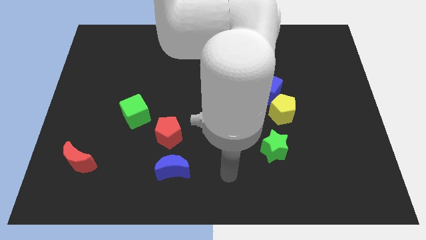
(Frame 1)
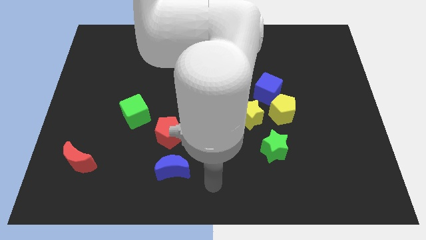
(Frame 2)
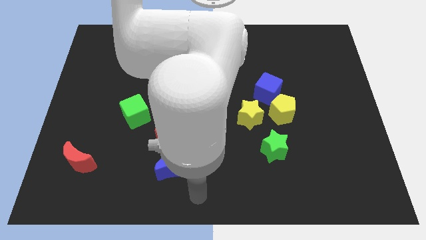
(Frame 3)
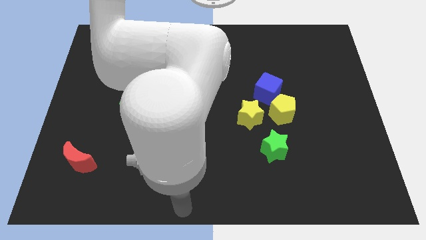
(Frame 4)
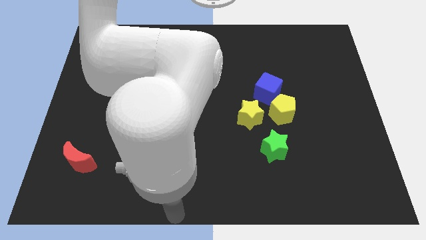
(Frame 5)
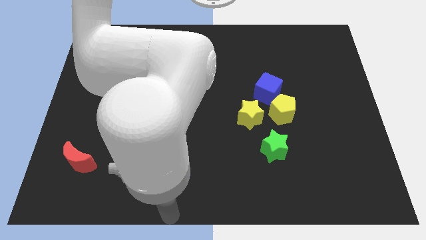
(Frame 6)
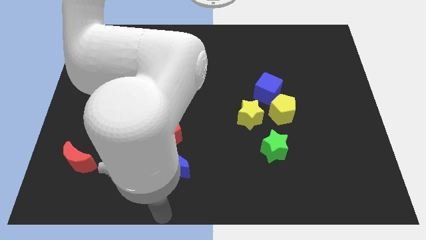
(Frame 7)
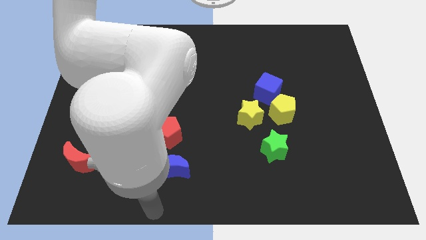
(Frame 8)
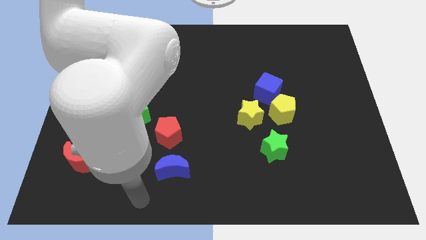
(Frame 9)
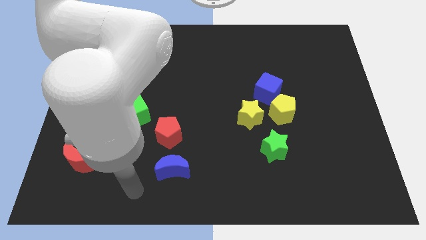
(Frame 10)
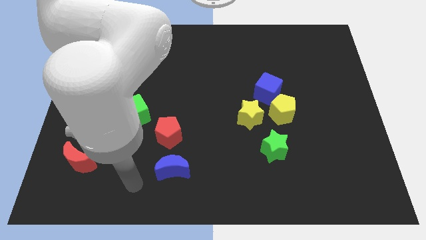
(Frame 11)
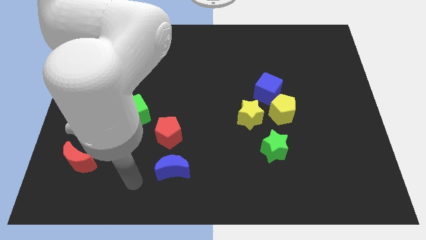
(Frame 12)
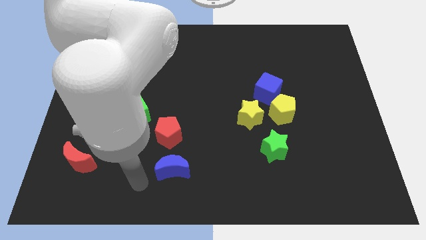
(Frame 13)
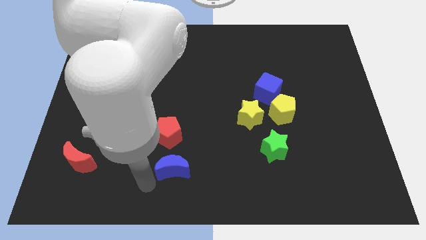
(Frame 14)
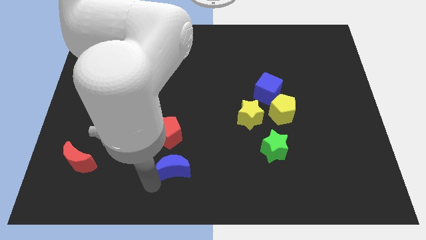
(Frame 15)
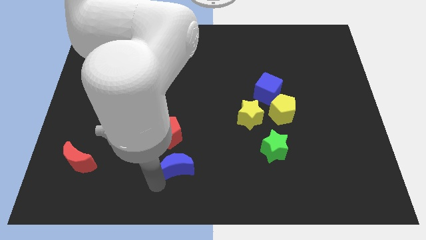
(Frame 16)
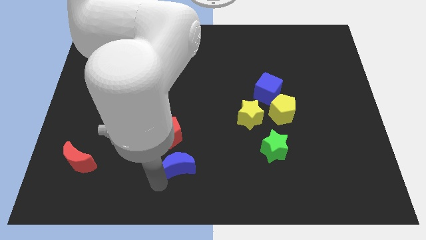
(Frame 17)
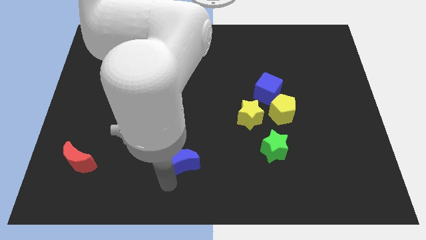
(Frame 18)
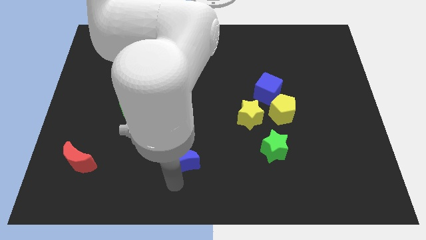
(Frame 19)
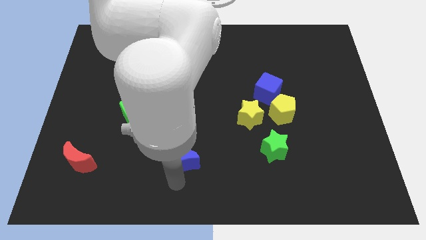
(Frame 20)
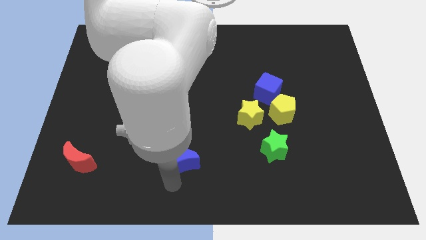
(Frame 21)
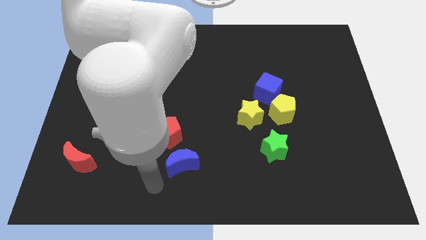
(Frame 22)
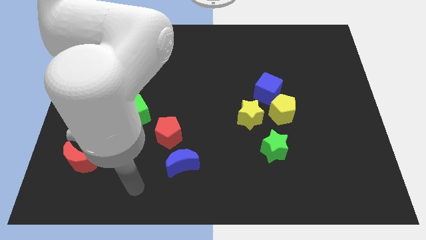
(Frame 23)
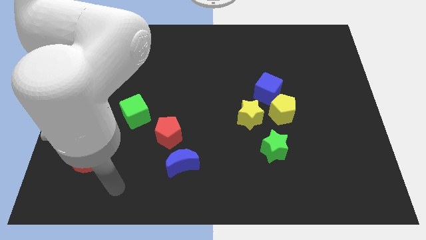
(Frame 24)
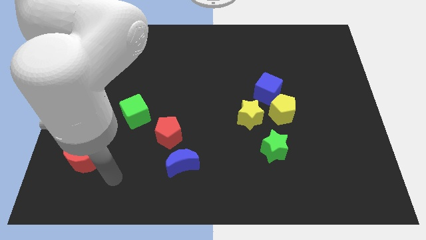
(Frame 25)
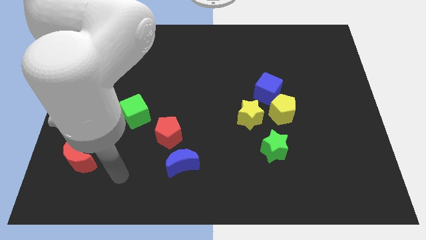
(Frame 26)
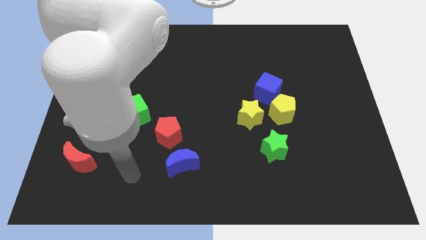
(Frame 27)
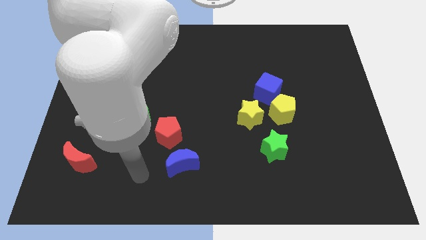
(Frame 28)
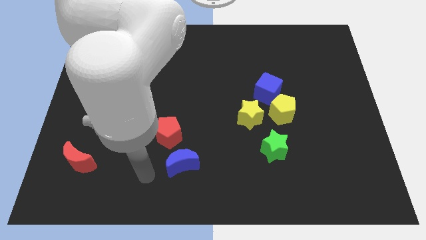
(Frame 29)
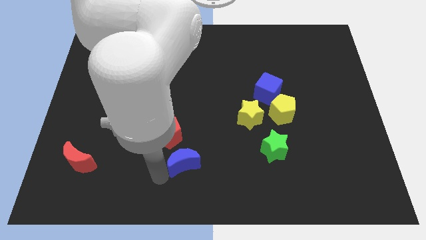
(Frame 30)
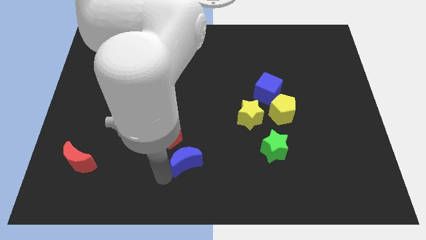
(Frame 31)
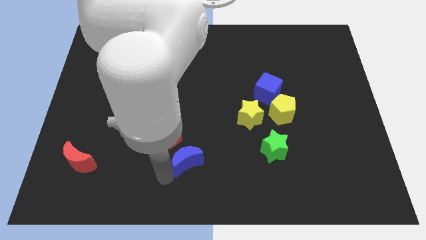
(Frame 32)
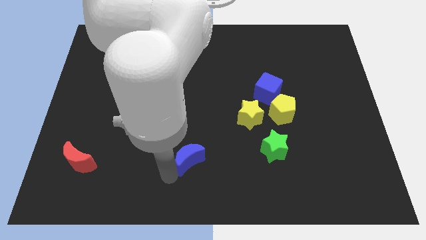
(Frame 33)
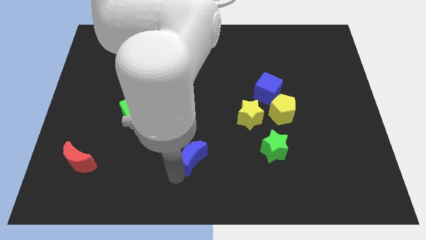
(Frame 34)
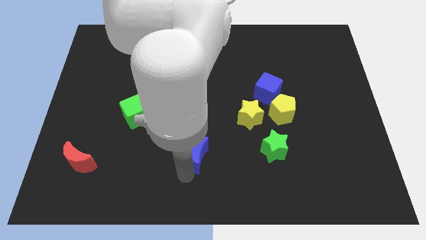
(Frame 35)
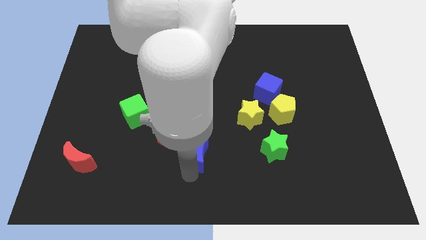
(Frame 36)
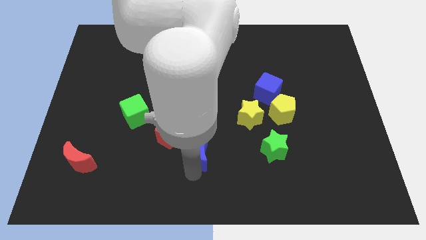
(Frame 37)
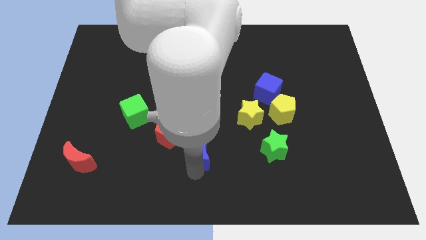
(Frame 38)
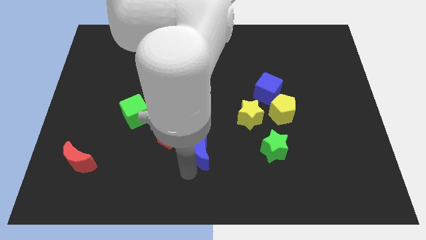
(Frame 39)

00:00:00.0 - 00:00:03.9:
push blue moon beside red pentagon

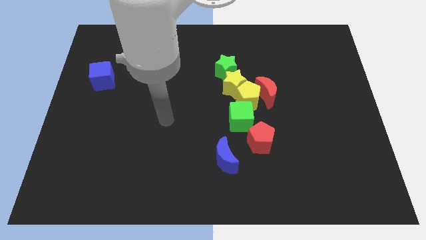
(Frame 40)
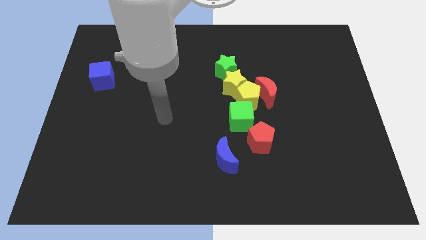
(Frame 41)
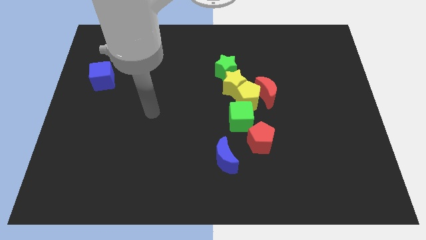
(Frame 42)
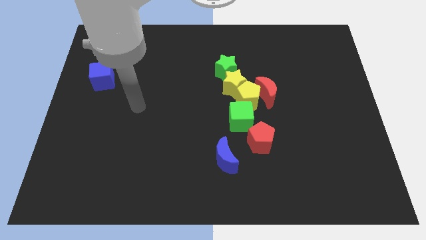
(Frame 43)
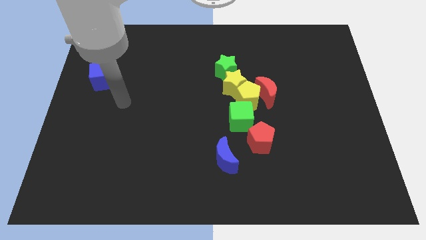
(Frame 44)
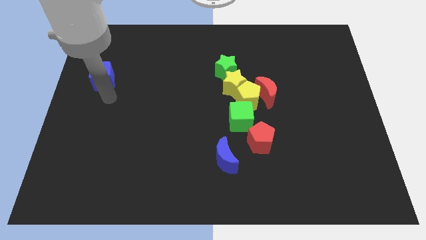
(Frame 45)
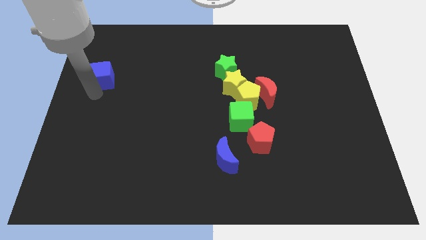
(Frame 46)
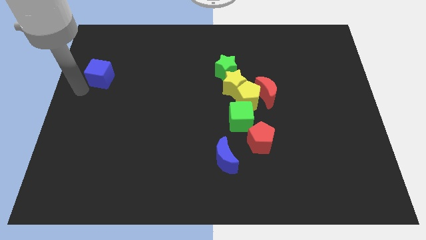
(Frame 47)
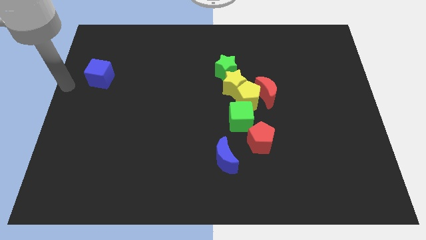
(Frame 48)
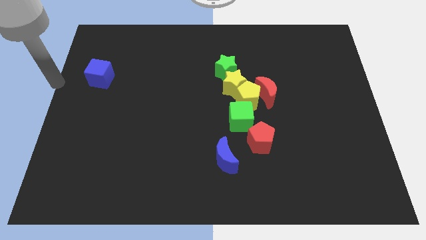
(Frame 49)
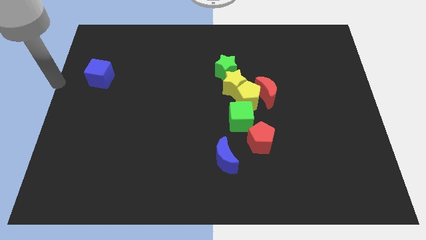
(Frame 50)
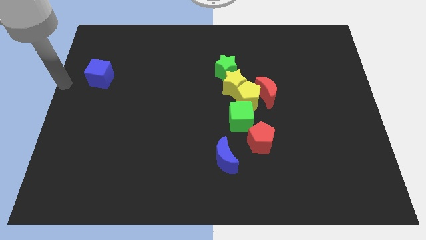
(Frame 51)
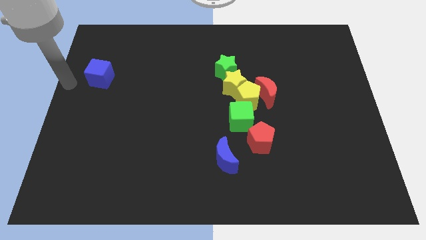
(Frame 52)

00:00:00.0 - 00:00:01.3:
slightly push the bottom side of the blue cube

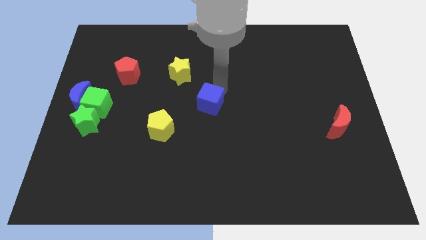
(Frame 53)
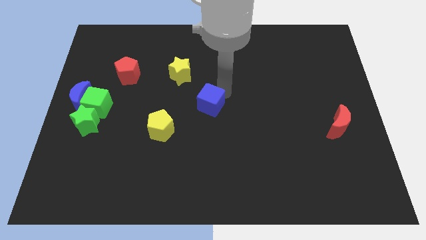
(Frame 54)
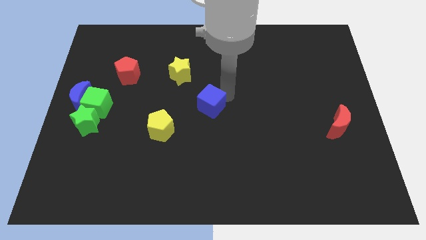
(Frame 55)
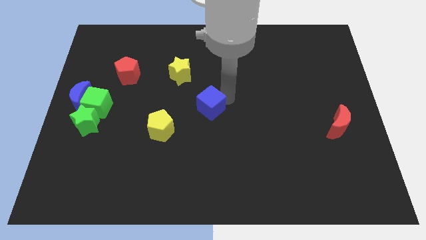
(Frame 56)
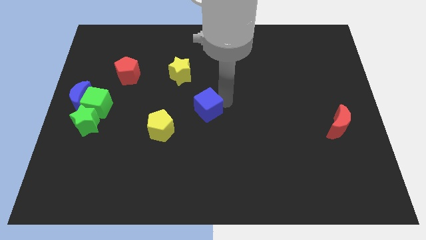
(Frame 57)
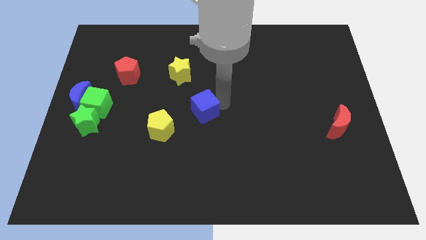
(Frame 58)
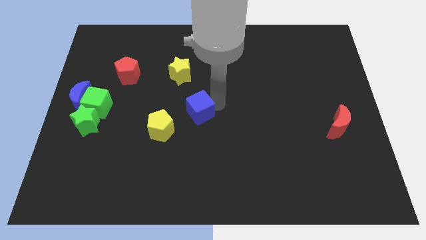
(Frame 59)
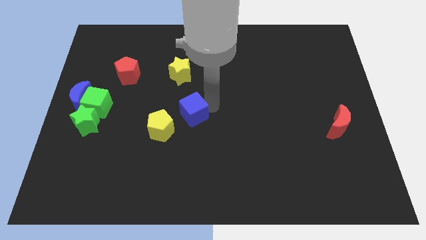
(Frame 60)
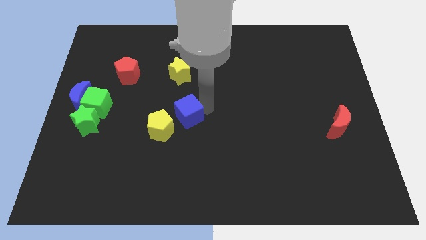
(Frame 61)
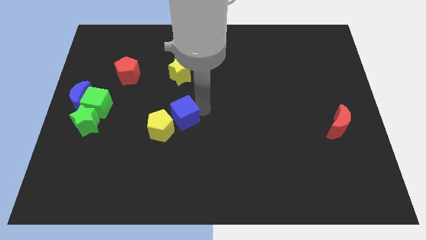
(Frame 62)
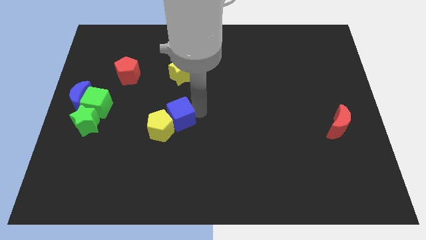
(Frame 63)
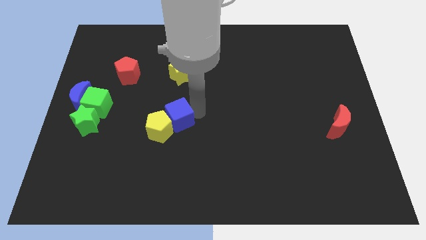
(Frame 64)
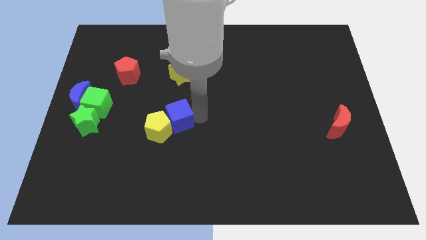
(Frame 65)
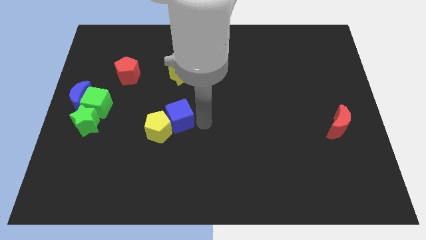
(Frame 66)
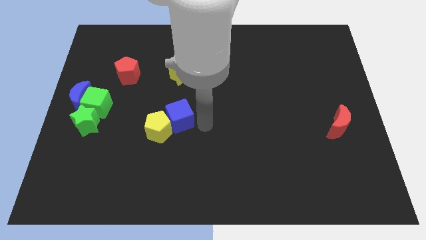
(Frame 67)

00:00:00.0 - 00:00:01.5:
push the blue cube into the yellow pentagon

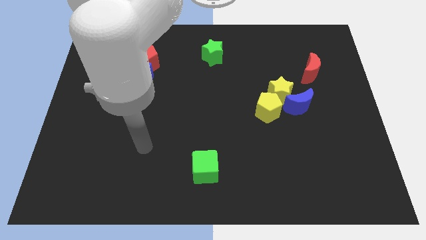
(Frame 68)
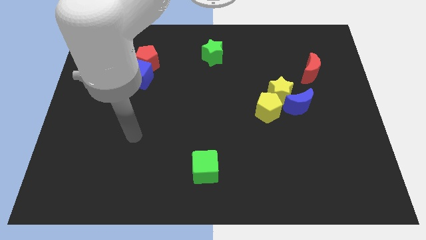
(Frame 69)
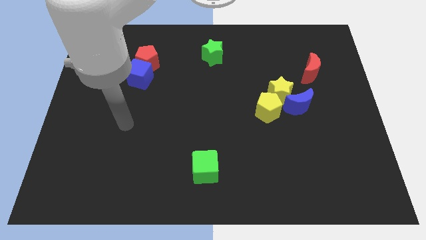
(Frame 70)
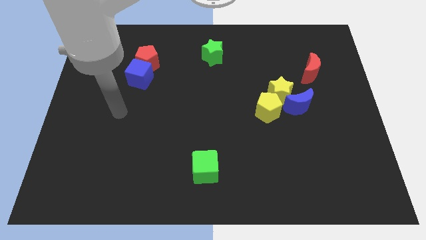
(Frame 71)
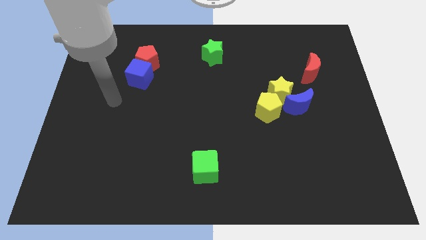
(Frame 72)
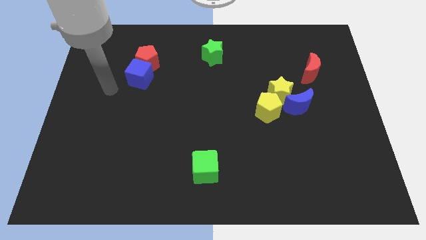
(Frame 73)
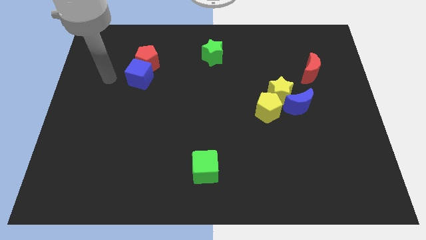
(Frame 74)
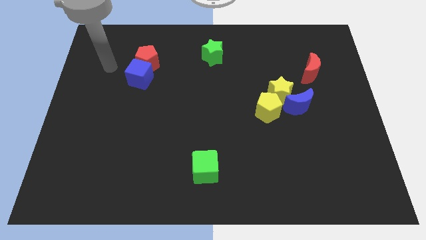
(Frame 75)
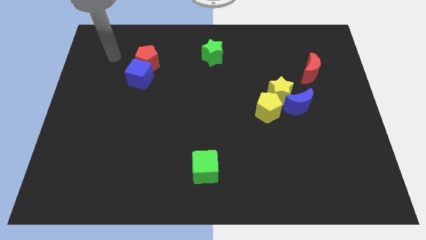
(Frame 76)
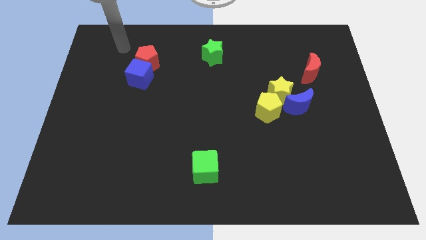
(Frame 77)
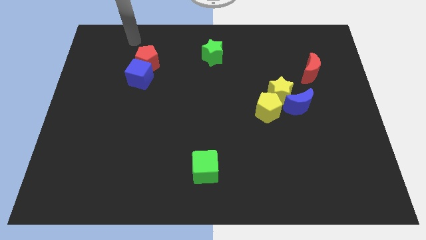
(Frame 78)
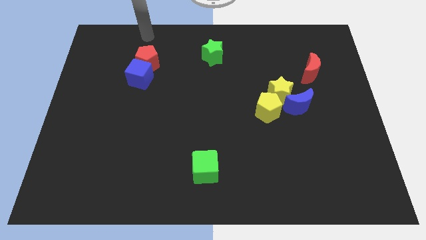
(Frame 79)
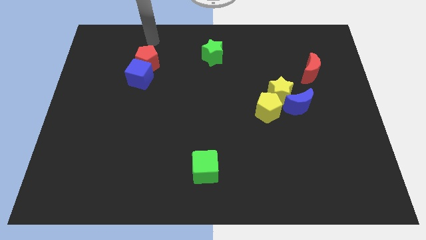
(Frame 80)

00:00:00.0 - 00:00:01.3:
move your hand to the top side of the red pentagon

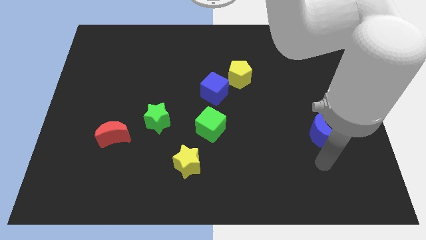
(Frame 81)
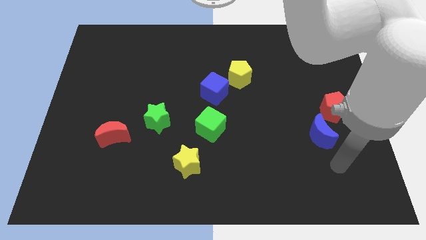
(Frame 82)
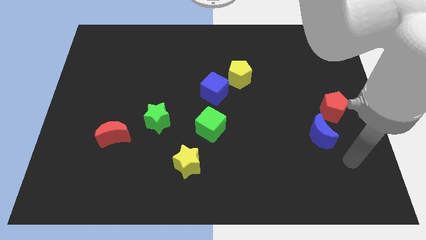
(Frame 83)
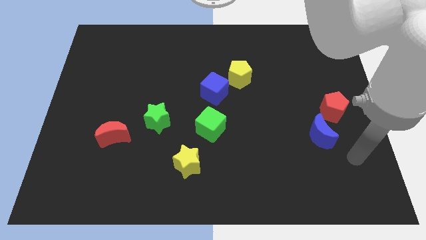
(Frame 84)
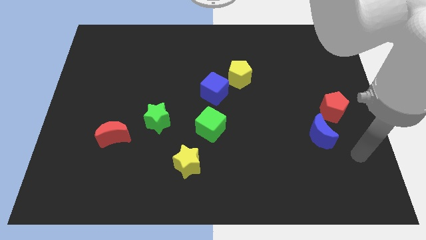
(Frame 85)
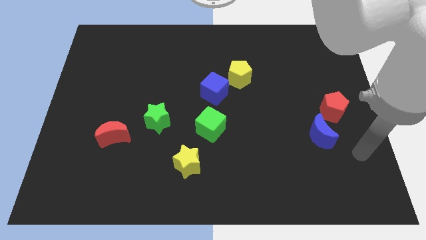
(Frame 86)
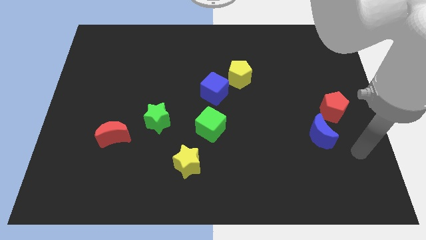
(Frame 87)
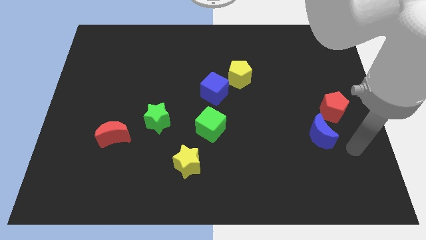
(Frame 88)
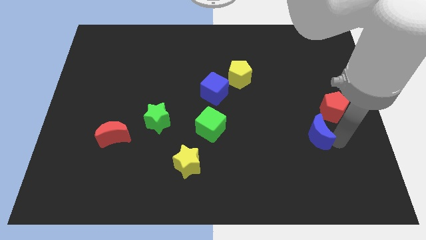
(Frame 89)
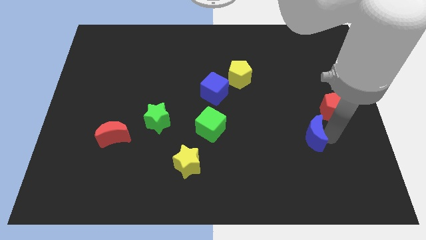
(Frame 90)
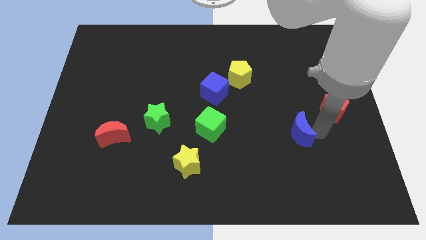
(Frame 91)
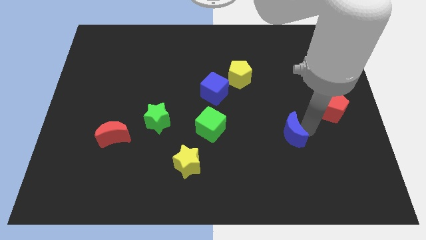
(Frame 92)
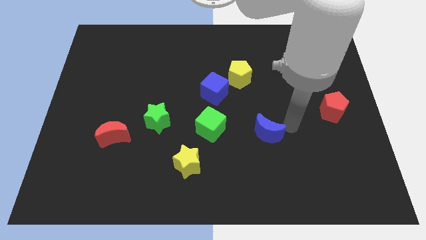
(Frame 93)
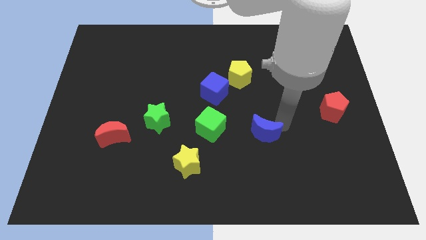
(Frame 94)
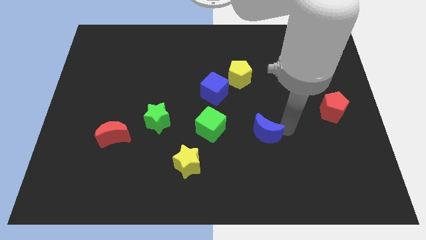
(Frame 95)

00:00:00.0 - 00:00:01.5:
push the blue moon slightly to the left side of the board
